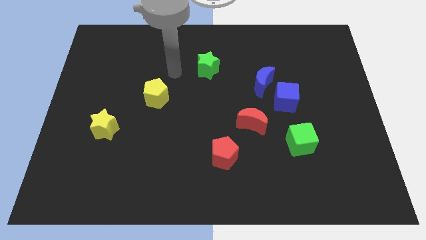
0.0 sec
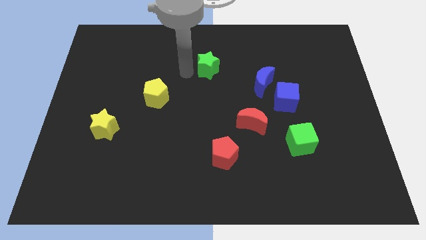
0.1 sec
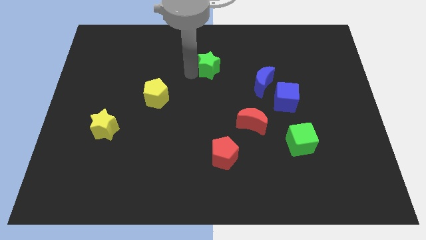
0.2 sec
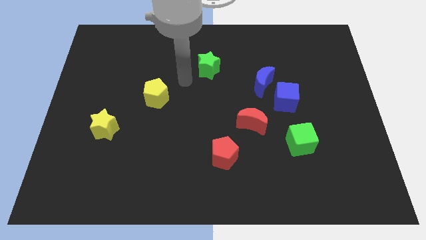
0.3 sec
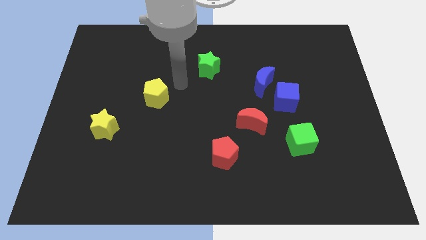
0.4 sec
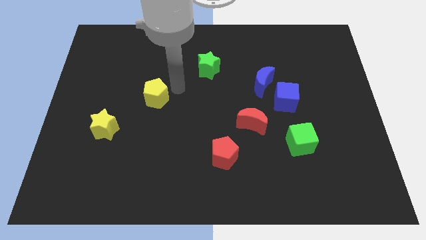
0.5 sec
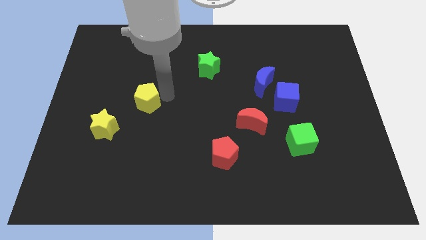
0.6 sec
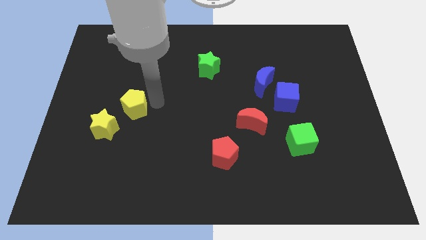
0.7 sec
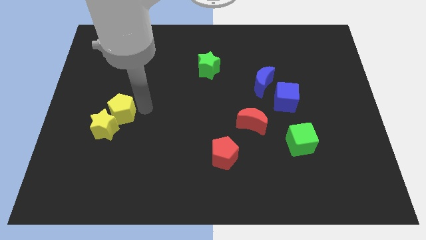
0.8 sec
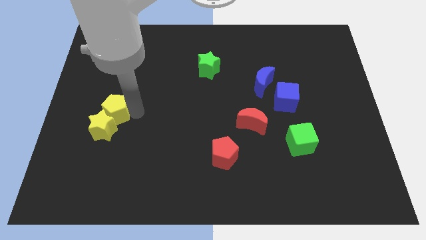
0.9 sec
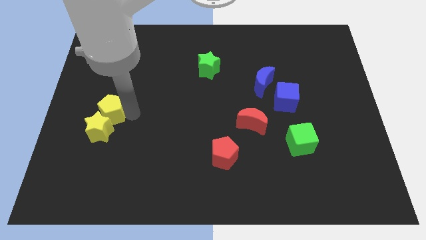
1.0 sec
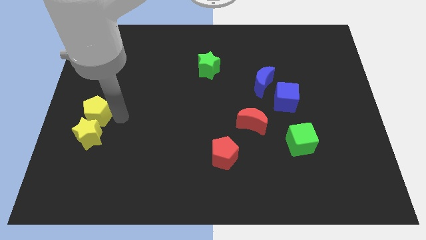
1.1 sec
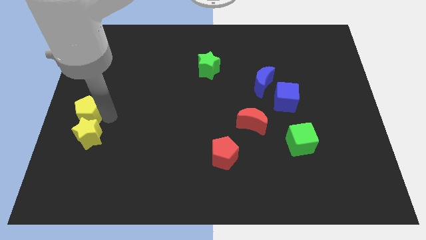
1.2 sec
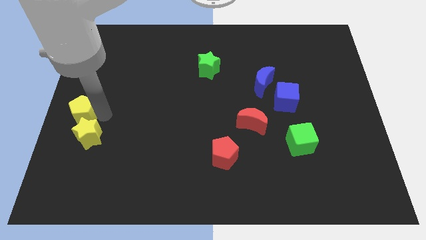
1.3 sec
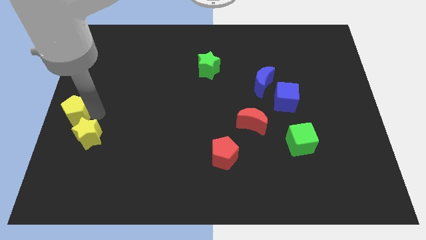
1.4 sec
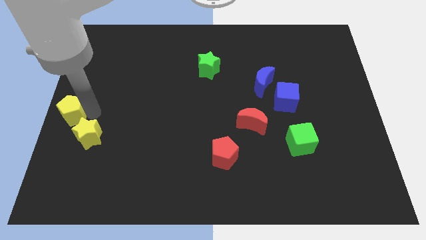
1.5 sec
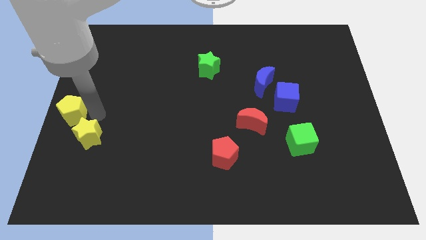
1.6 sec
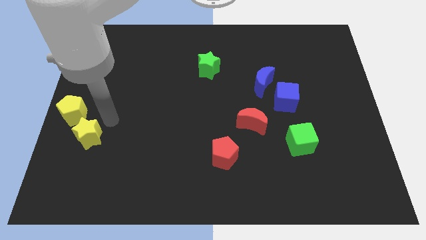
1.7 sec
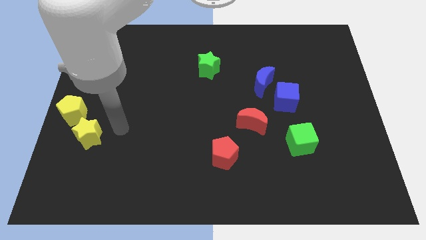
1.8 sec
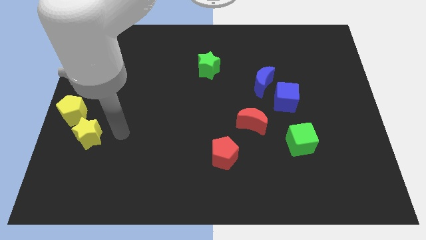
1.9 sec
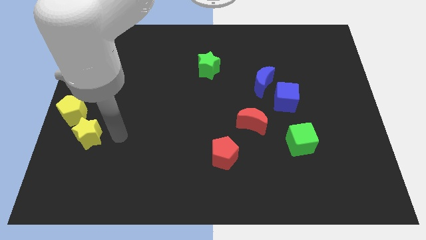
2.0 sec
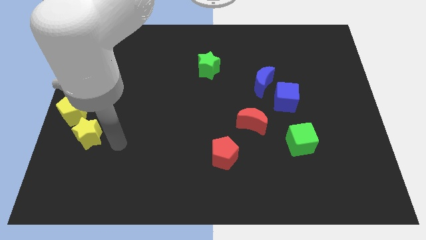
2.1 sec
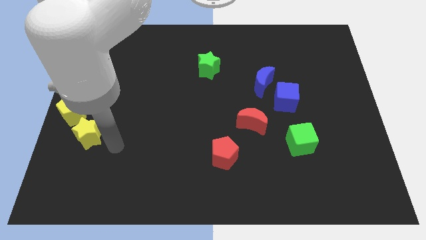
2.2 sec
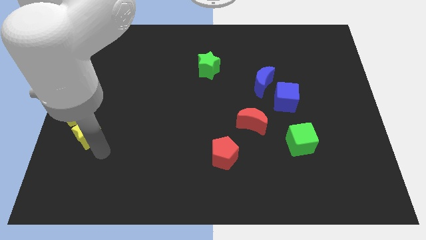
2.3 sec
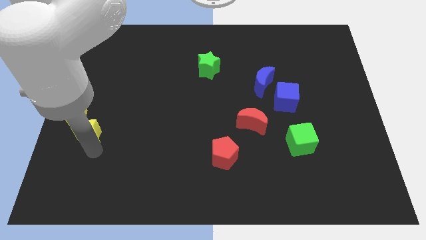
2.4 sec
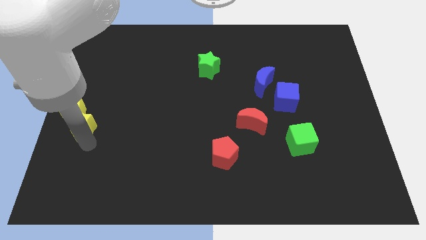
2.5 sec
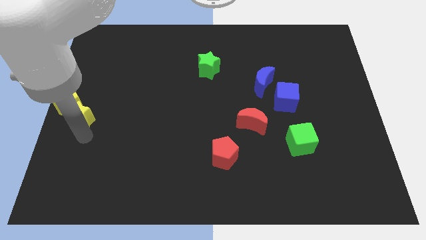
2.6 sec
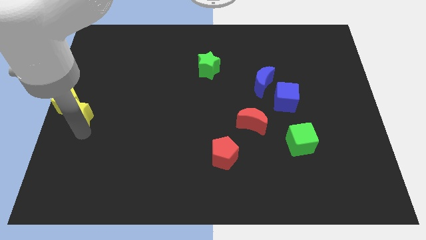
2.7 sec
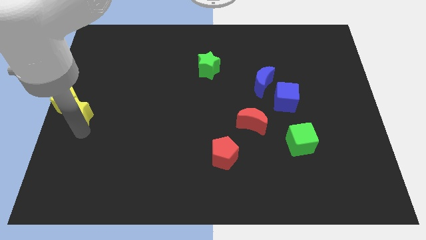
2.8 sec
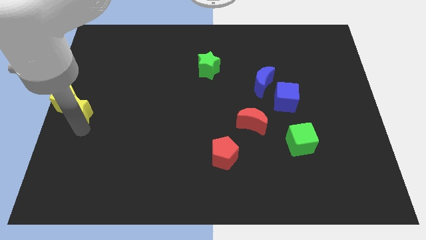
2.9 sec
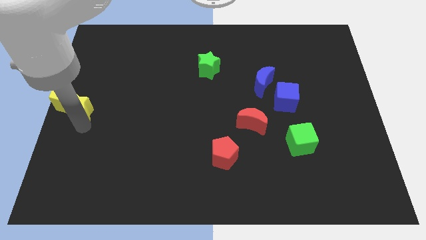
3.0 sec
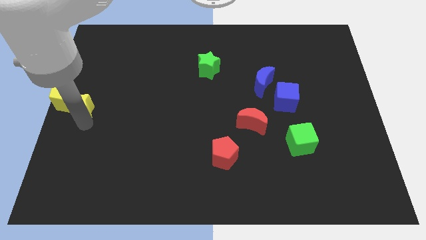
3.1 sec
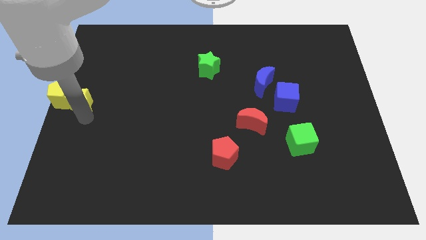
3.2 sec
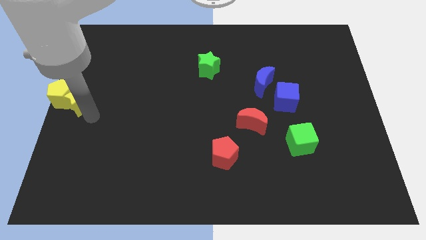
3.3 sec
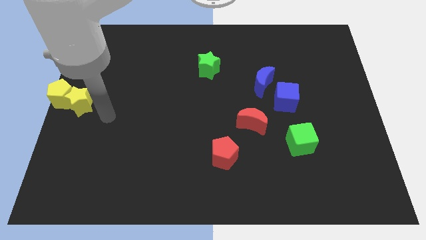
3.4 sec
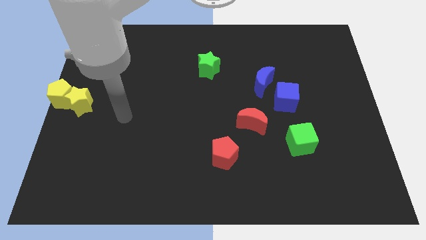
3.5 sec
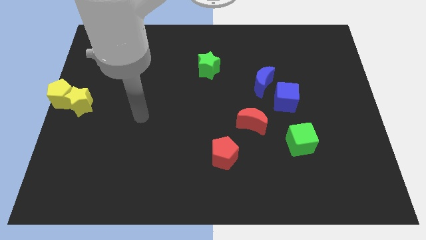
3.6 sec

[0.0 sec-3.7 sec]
move the yellow star and yellow pentagon to the left center

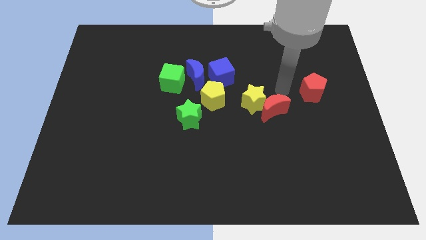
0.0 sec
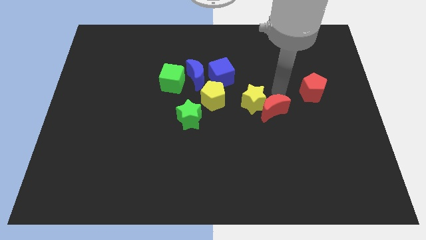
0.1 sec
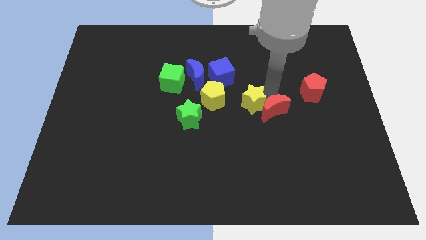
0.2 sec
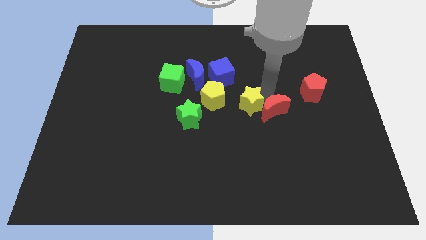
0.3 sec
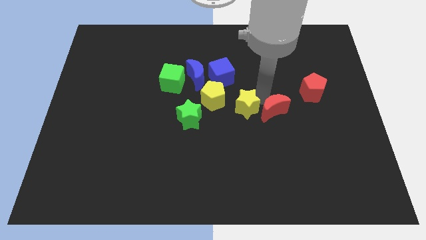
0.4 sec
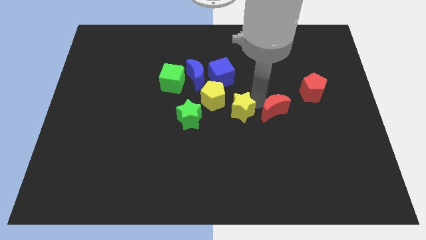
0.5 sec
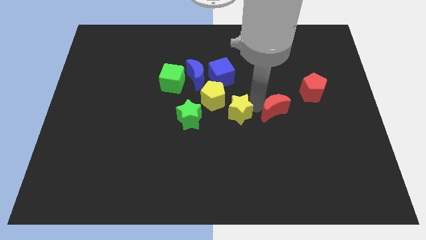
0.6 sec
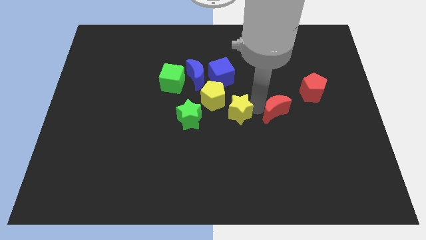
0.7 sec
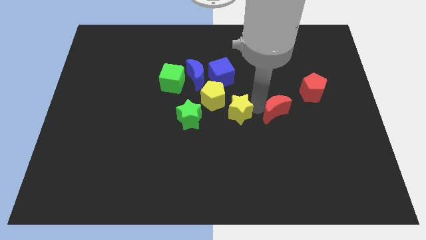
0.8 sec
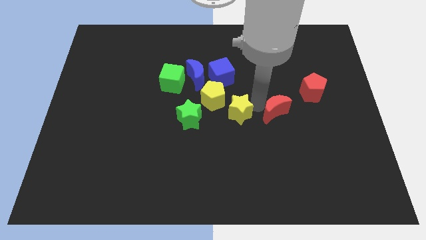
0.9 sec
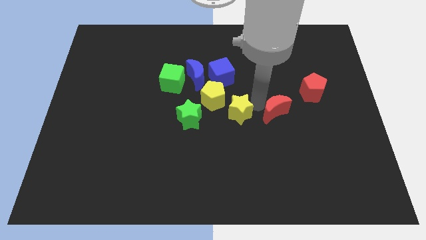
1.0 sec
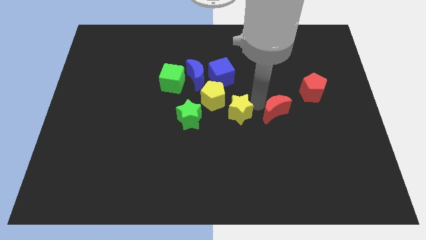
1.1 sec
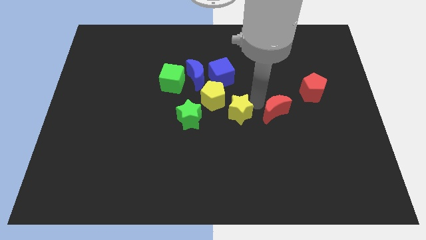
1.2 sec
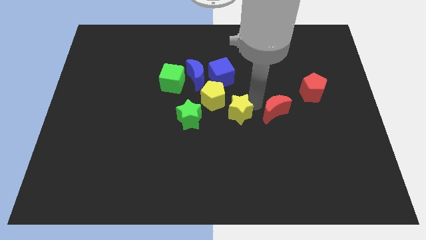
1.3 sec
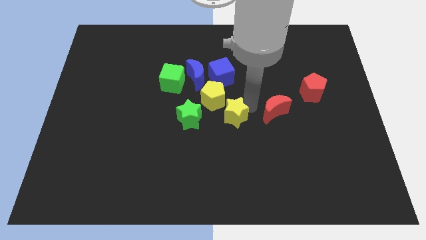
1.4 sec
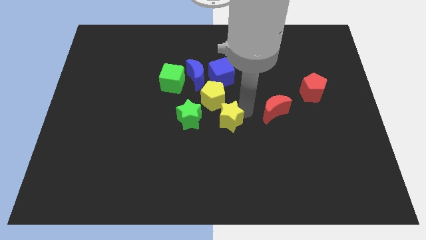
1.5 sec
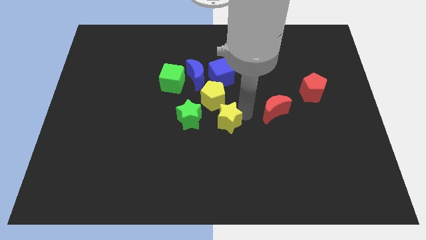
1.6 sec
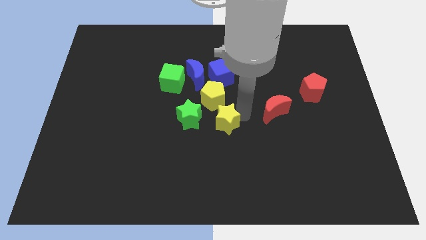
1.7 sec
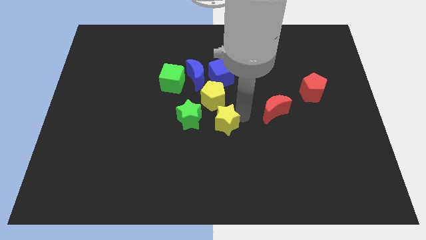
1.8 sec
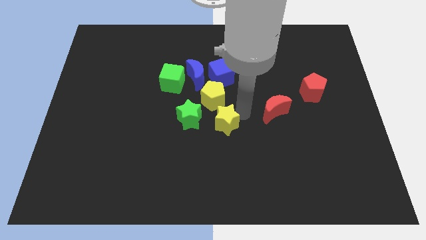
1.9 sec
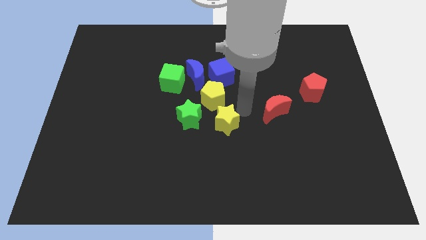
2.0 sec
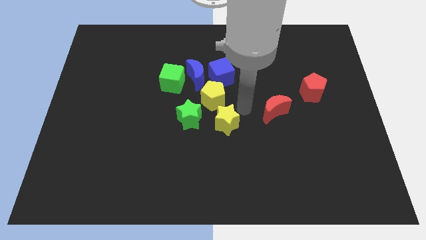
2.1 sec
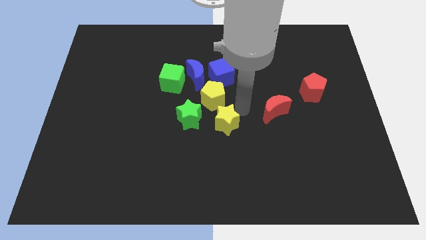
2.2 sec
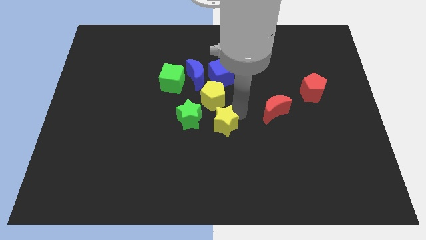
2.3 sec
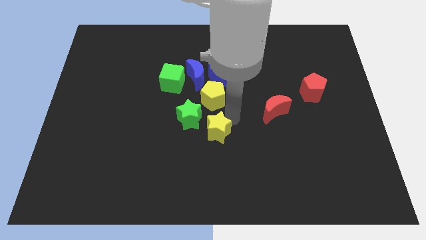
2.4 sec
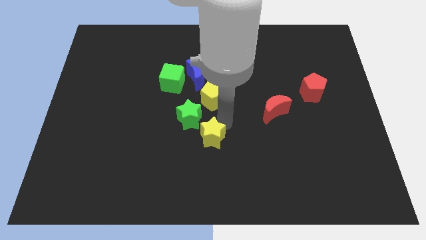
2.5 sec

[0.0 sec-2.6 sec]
push the yellow star to the bottom side of the yellow pentagon

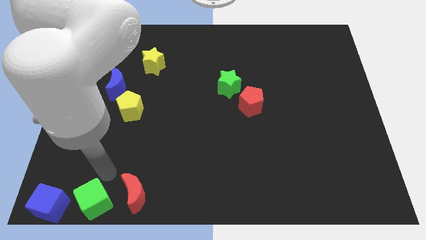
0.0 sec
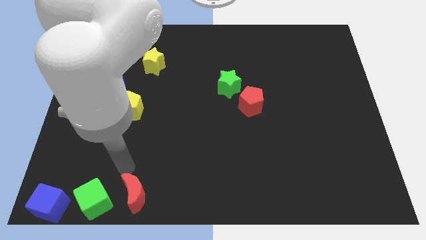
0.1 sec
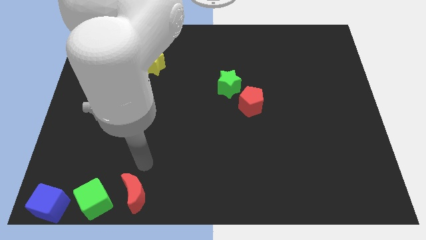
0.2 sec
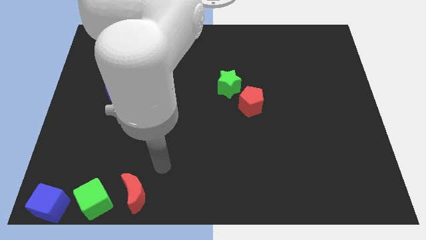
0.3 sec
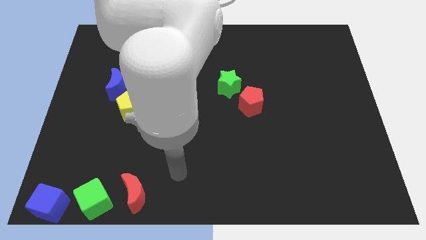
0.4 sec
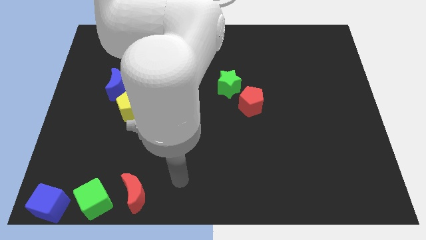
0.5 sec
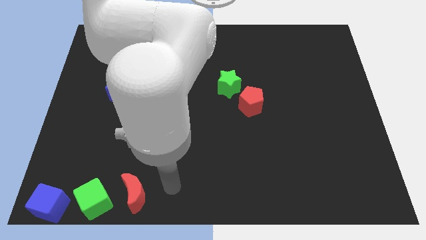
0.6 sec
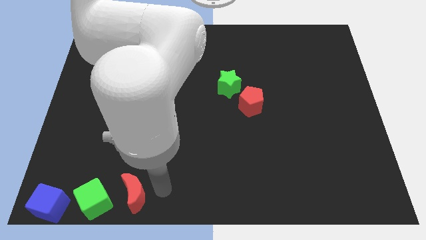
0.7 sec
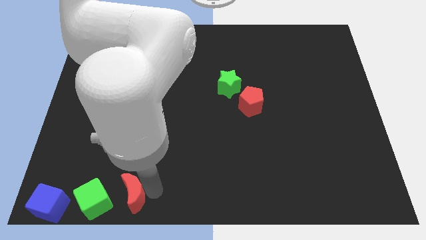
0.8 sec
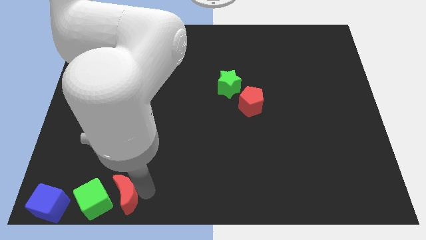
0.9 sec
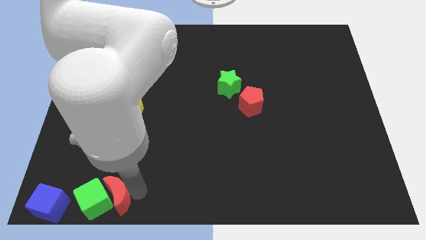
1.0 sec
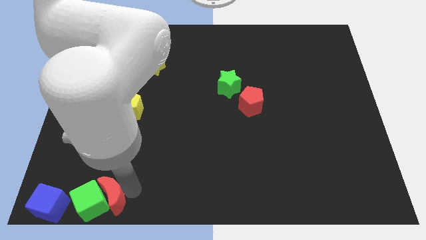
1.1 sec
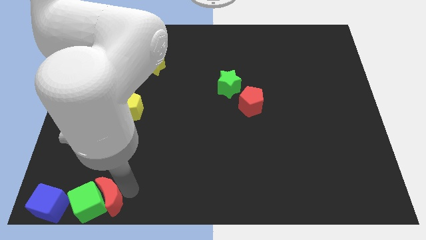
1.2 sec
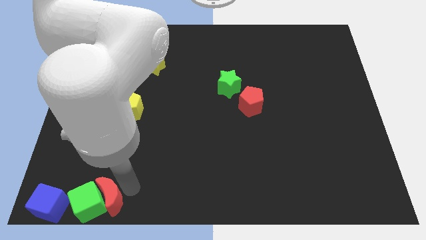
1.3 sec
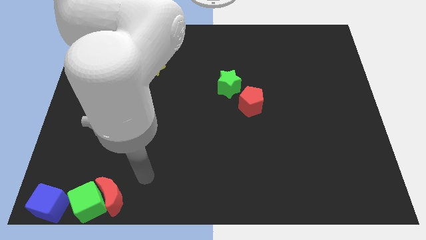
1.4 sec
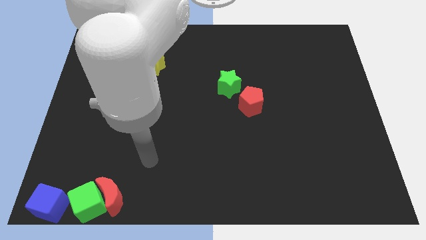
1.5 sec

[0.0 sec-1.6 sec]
place the red crescent to the right of the green cube

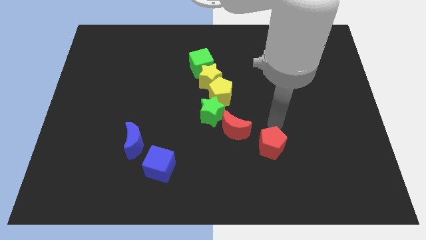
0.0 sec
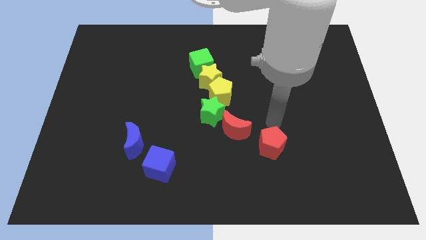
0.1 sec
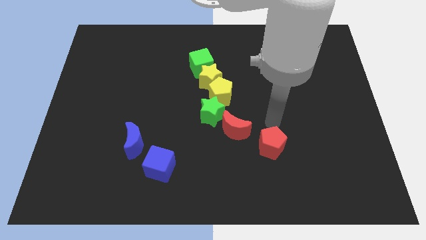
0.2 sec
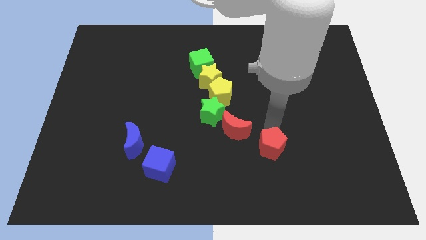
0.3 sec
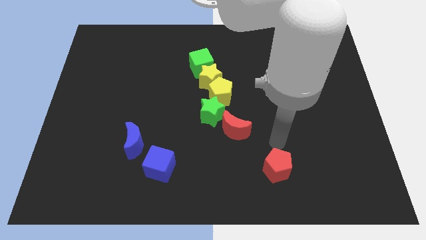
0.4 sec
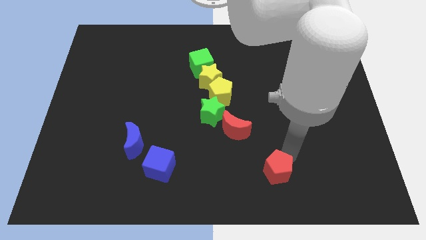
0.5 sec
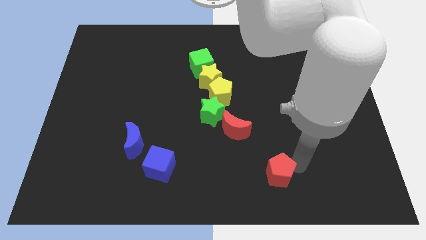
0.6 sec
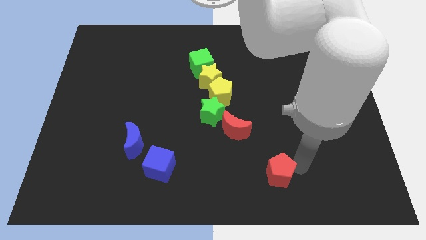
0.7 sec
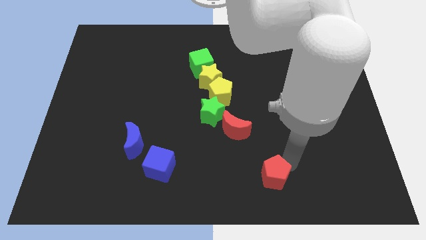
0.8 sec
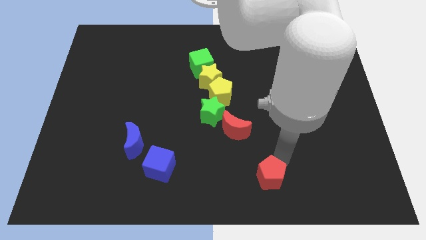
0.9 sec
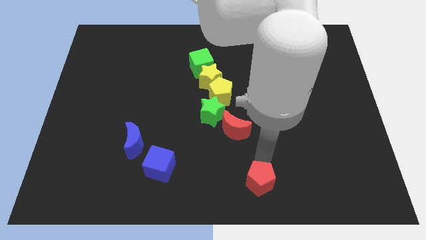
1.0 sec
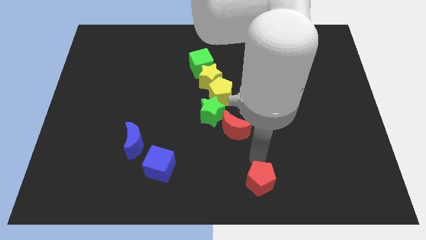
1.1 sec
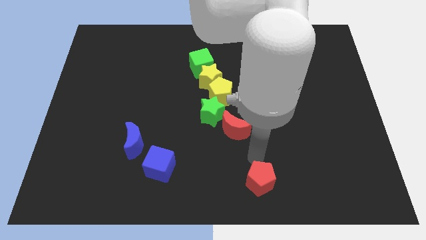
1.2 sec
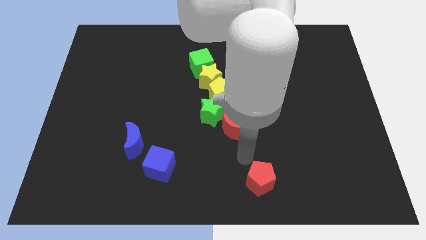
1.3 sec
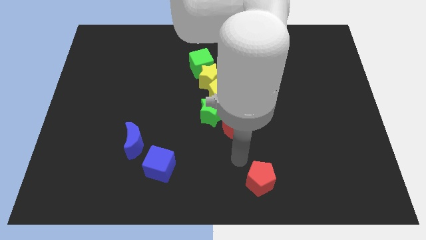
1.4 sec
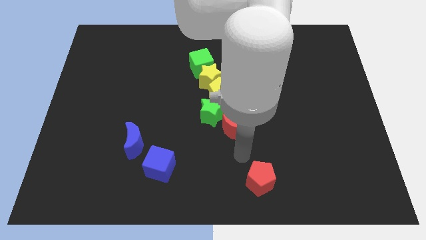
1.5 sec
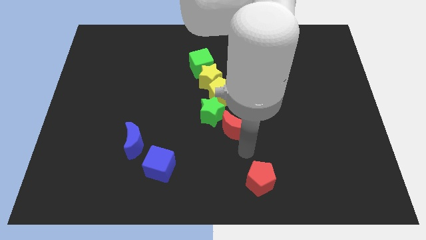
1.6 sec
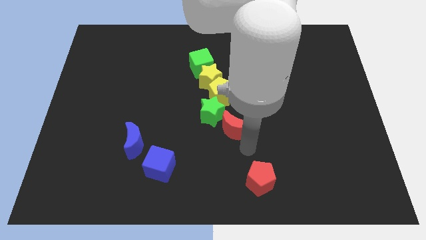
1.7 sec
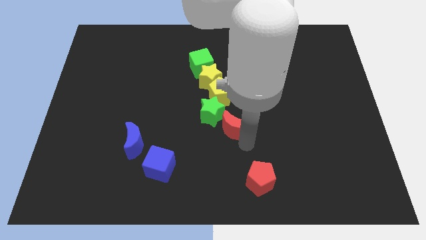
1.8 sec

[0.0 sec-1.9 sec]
drag red pentagon to the bottom side
